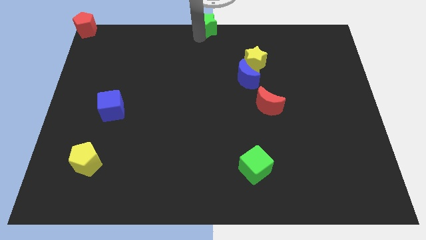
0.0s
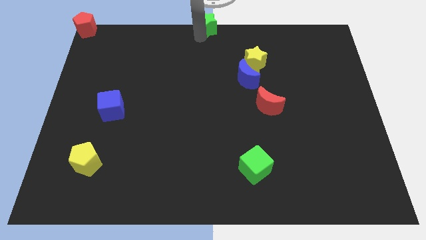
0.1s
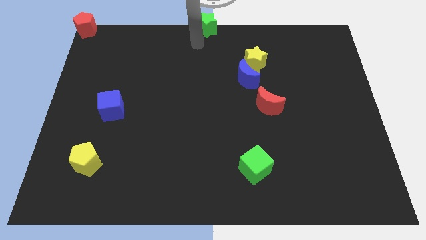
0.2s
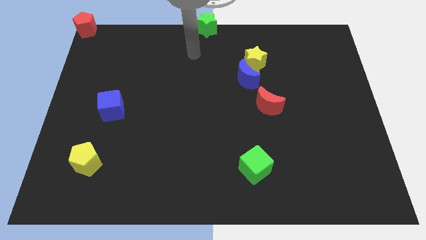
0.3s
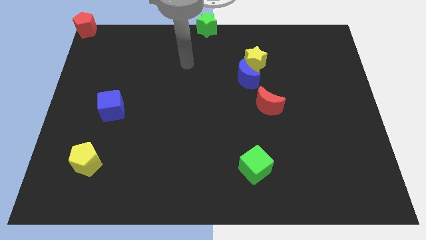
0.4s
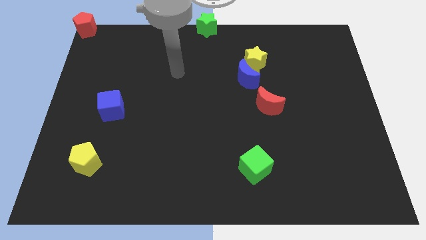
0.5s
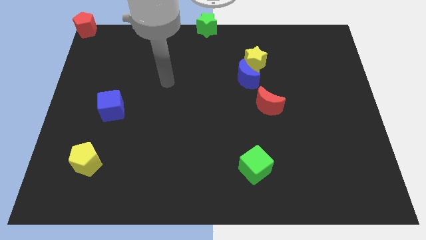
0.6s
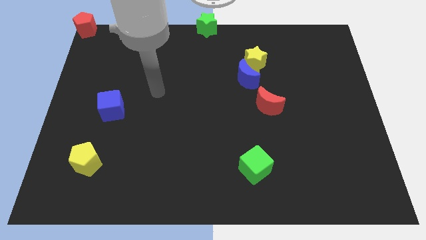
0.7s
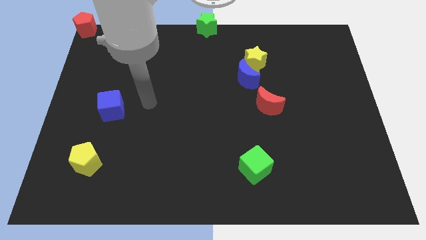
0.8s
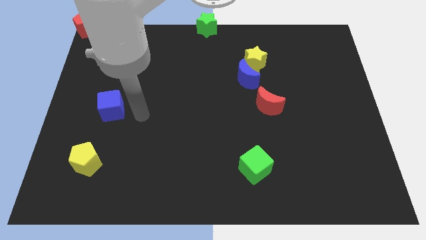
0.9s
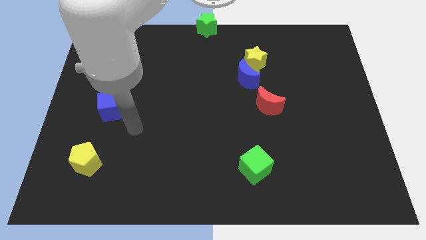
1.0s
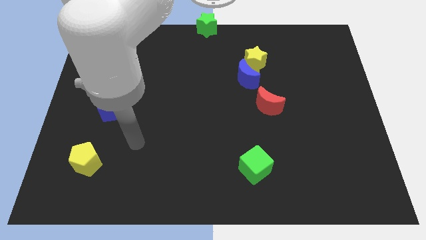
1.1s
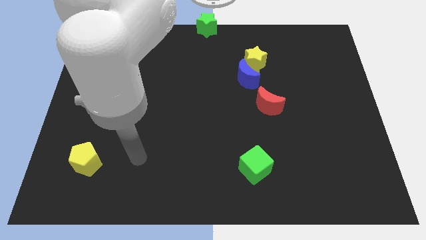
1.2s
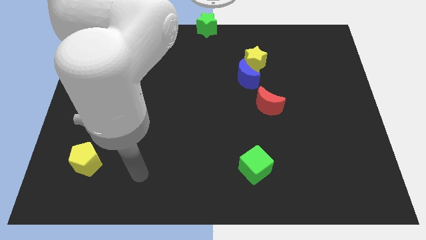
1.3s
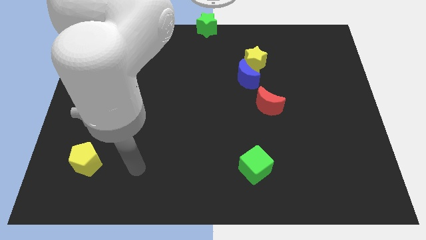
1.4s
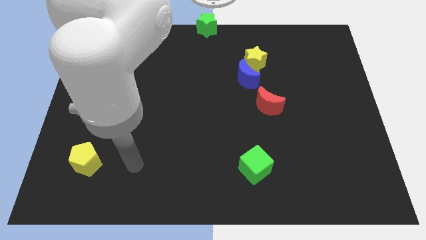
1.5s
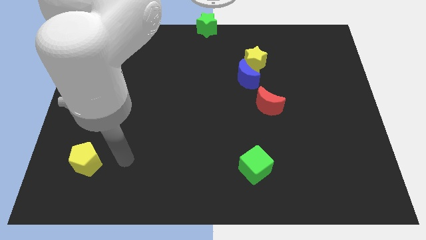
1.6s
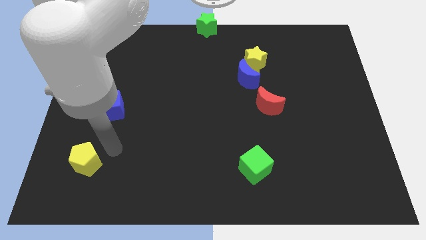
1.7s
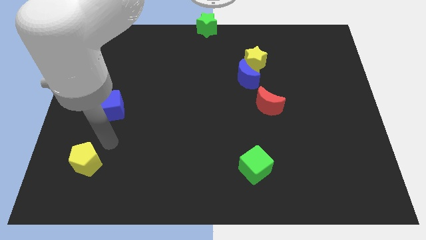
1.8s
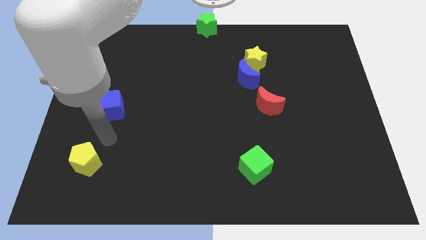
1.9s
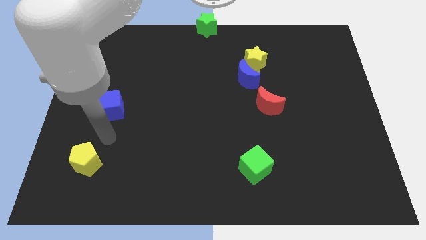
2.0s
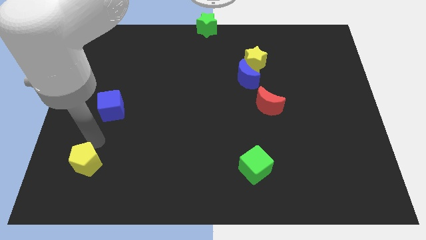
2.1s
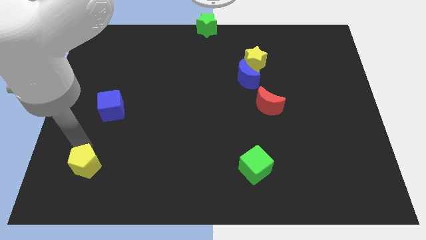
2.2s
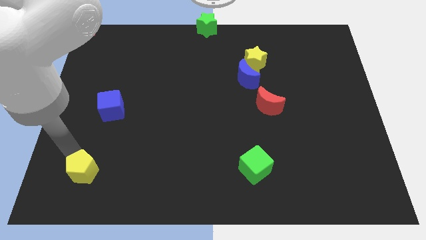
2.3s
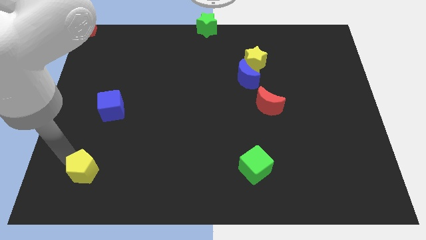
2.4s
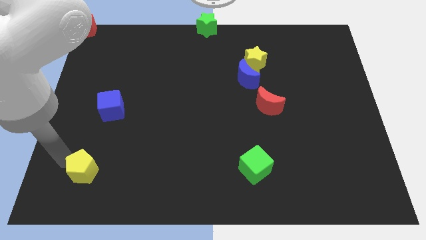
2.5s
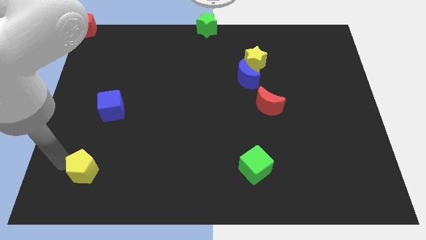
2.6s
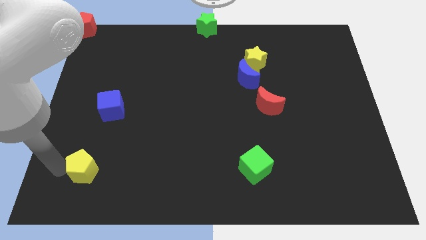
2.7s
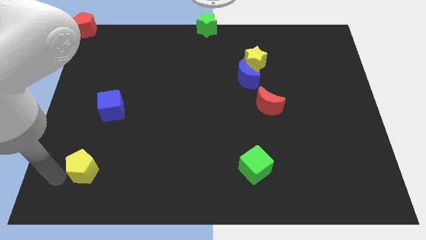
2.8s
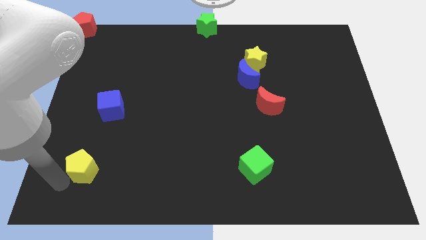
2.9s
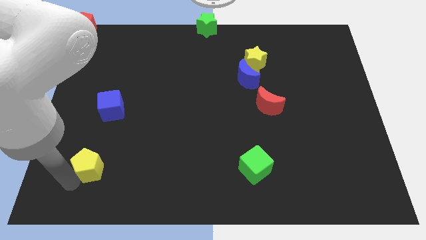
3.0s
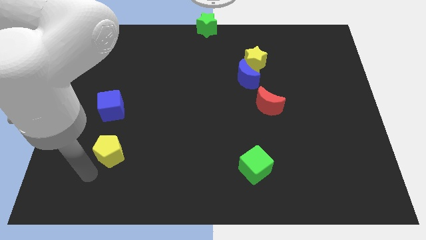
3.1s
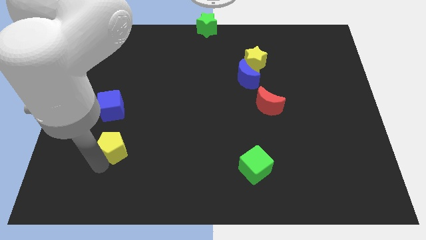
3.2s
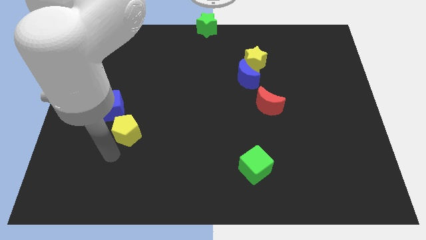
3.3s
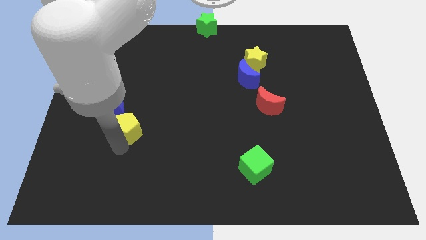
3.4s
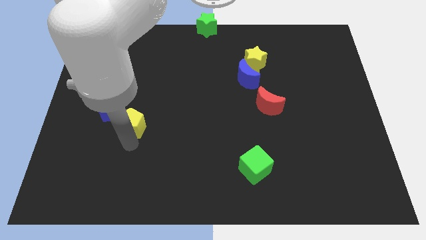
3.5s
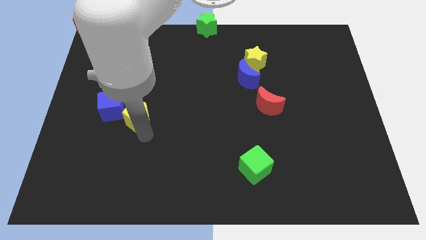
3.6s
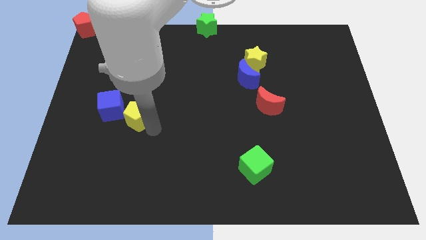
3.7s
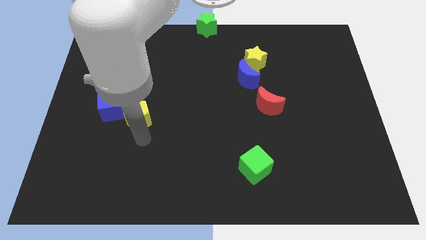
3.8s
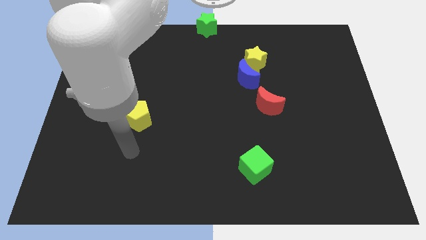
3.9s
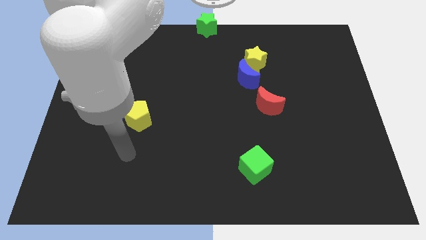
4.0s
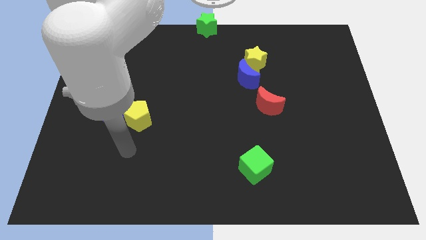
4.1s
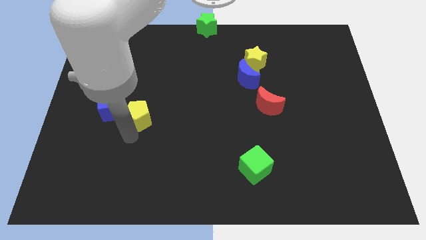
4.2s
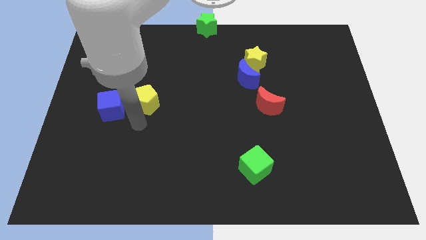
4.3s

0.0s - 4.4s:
put the yellow pentagon to the right side of blue cube

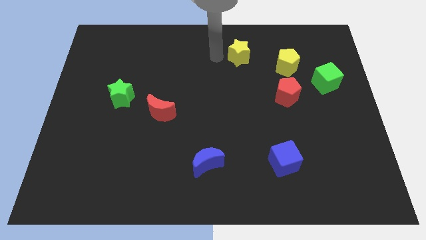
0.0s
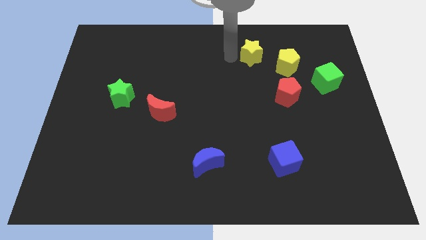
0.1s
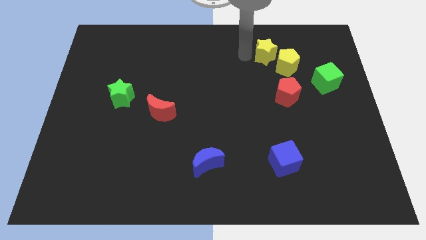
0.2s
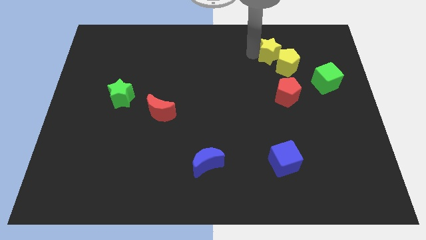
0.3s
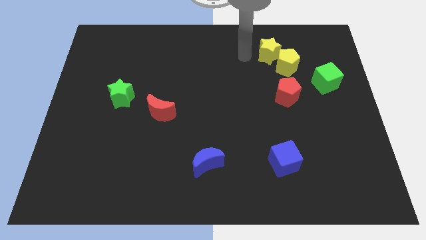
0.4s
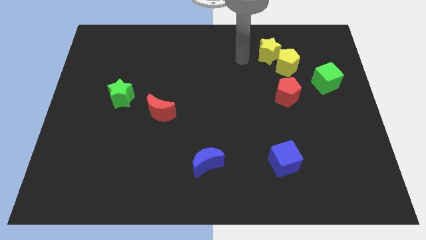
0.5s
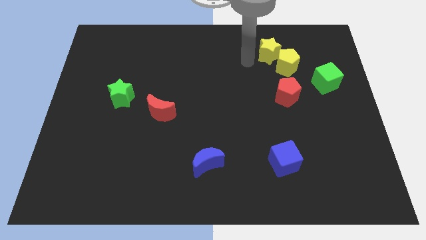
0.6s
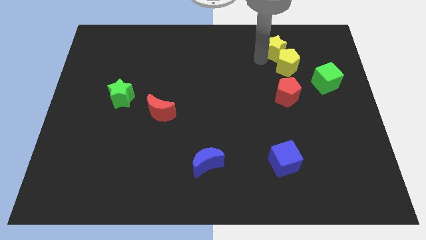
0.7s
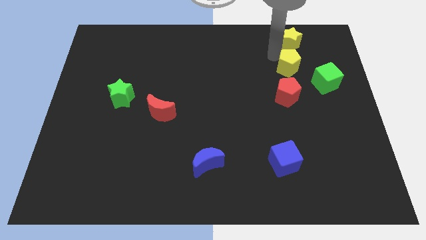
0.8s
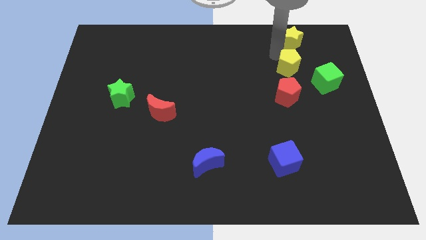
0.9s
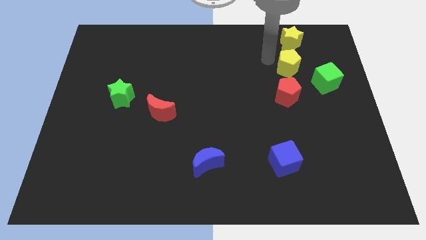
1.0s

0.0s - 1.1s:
place yellow star to the top of yellow pentagon

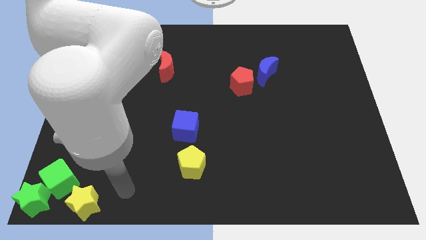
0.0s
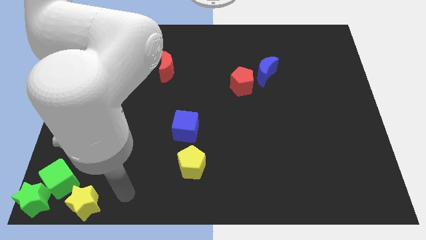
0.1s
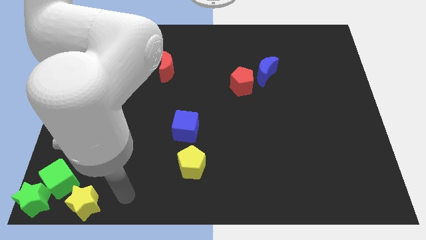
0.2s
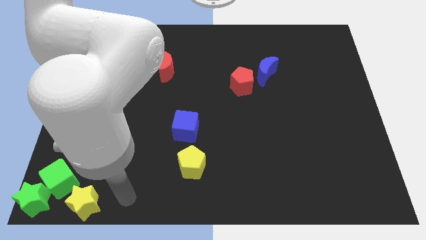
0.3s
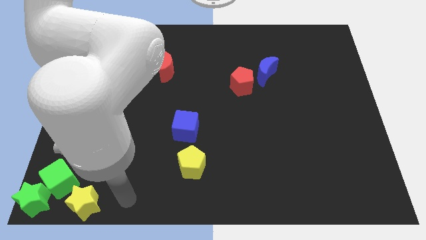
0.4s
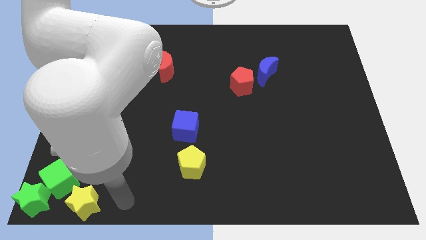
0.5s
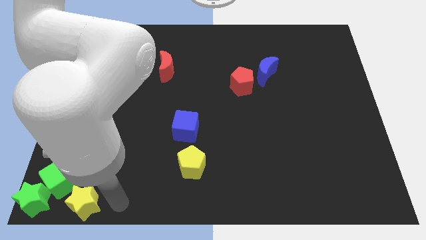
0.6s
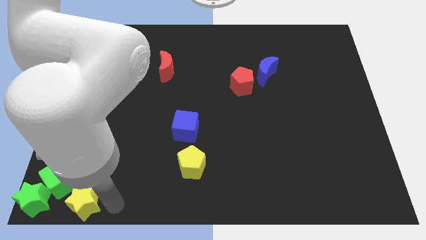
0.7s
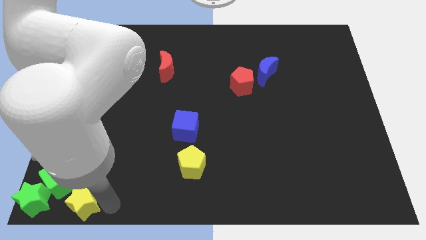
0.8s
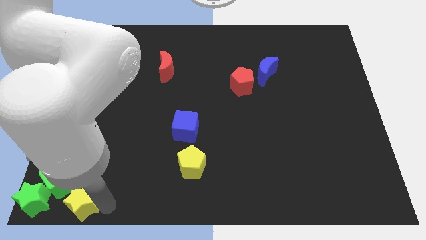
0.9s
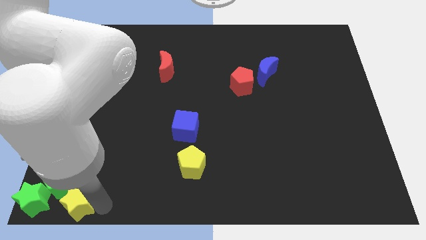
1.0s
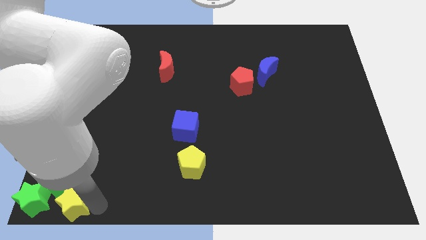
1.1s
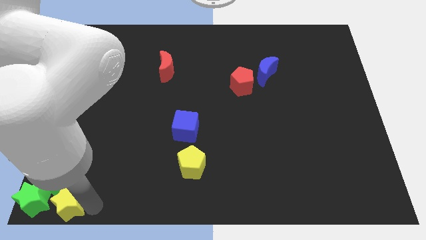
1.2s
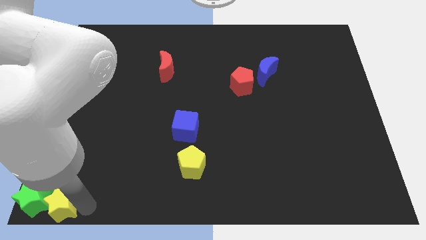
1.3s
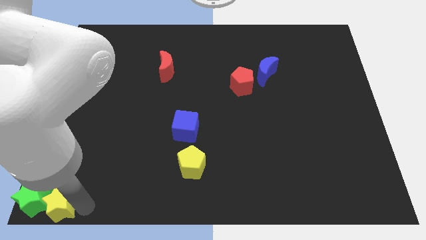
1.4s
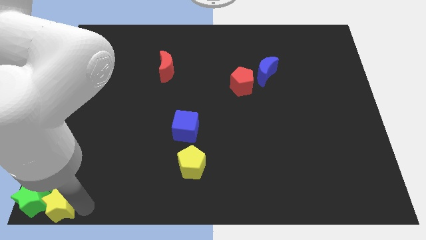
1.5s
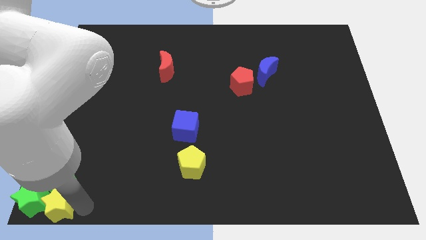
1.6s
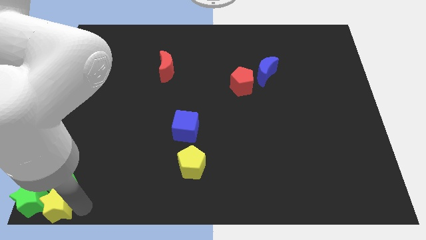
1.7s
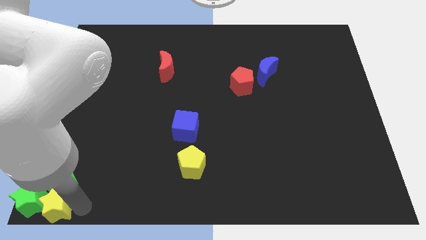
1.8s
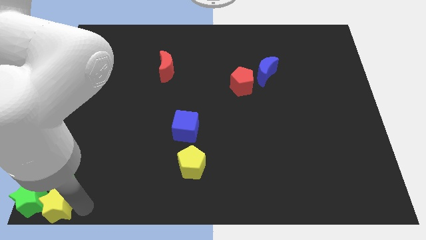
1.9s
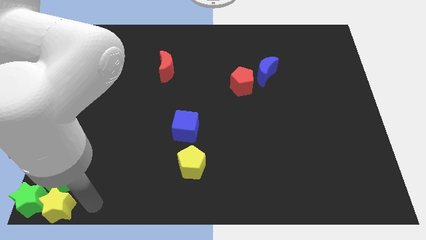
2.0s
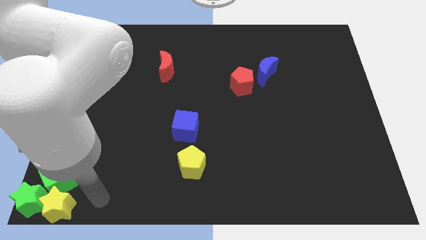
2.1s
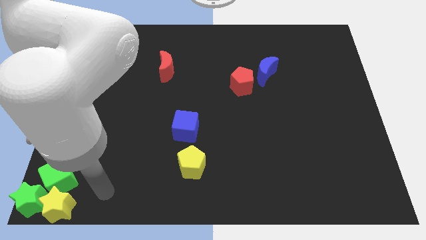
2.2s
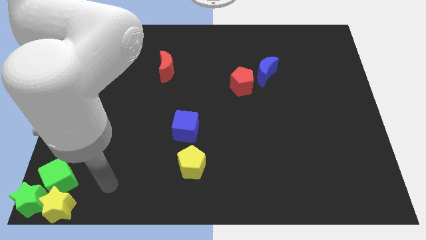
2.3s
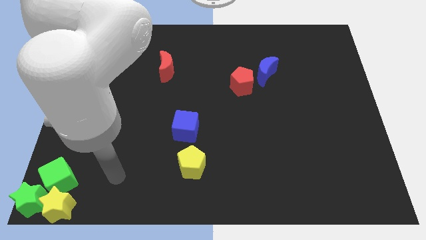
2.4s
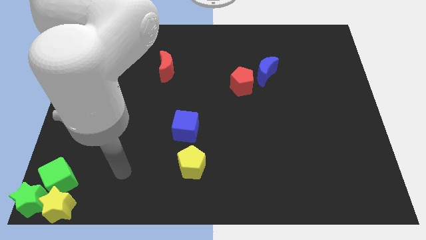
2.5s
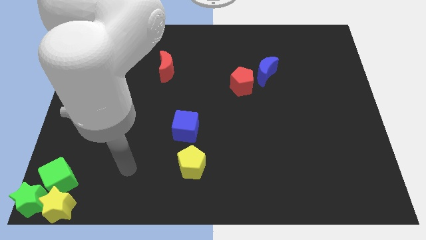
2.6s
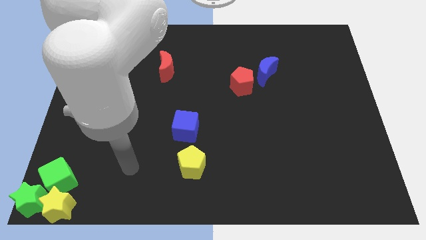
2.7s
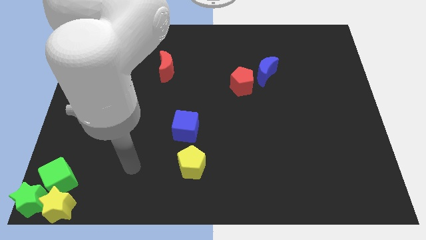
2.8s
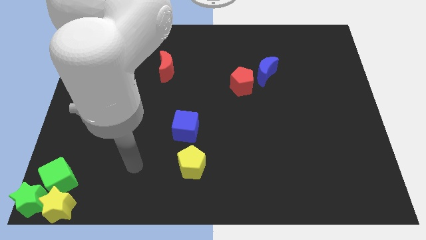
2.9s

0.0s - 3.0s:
put the yellow star into the green star and green cube

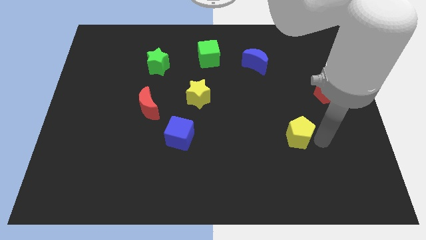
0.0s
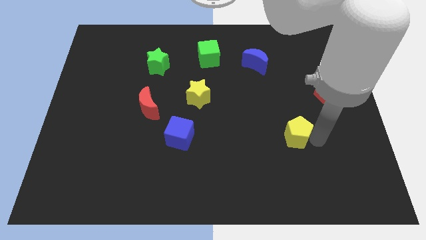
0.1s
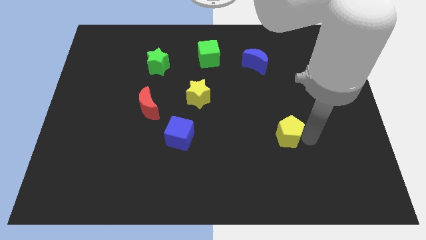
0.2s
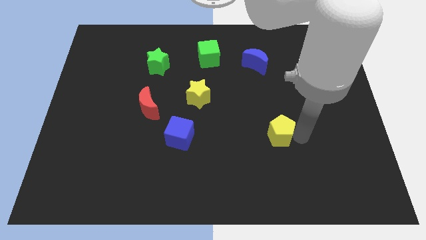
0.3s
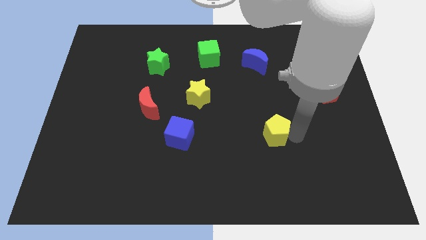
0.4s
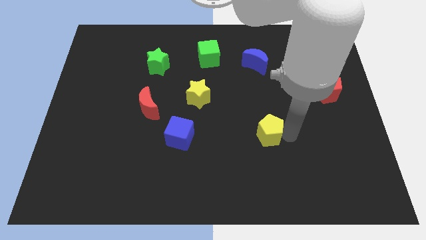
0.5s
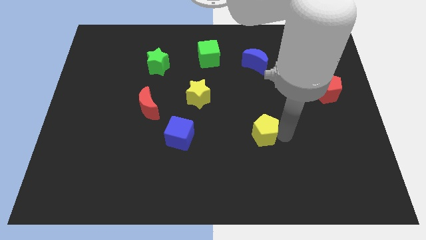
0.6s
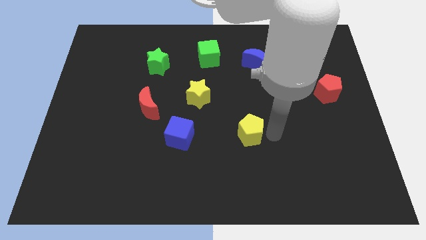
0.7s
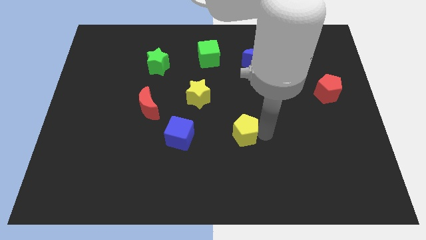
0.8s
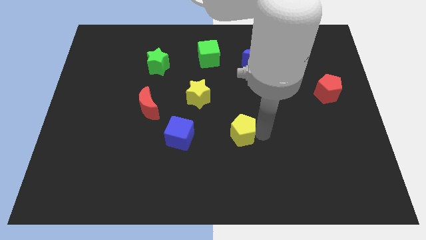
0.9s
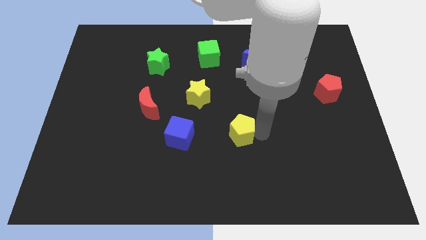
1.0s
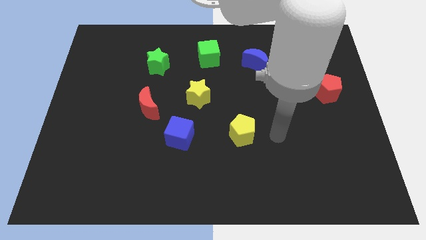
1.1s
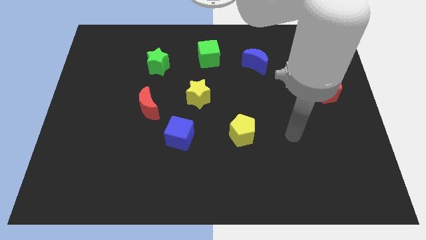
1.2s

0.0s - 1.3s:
place the yellow pentagon to the right of the blue cube
